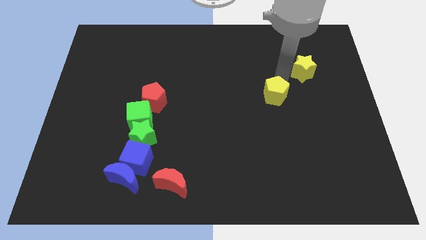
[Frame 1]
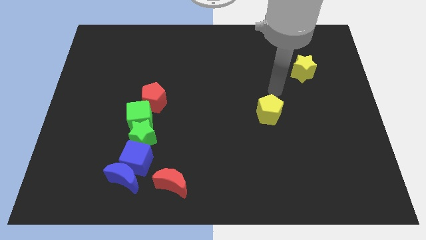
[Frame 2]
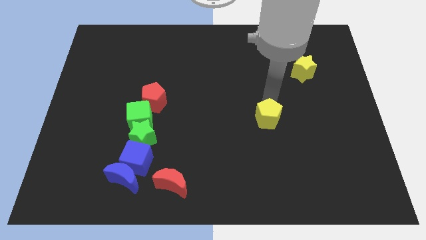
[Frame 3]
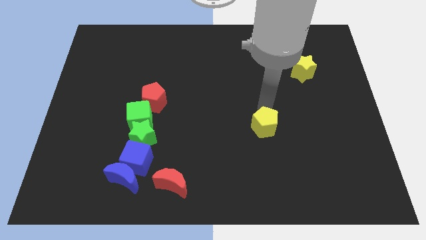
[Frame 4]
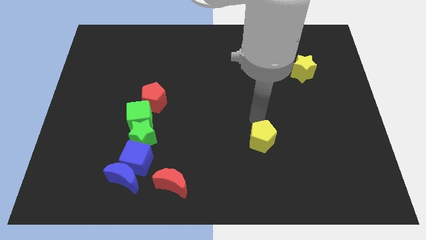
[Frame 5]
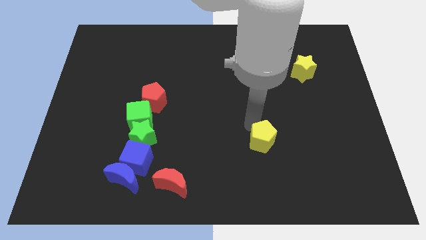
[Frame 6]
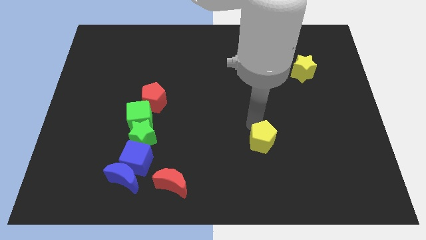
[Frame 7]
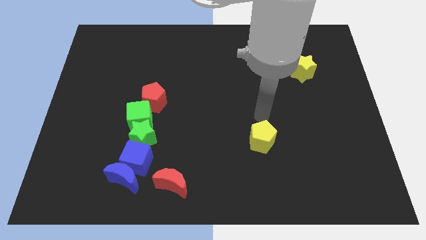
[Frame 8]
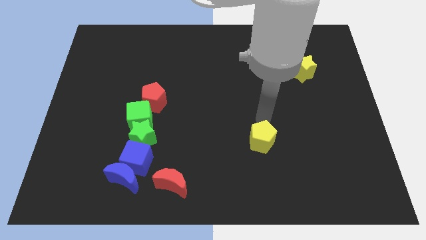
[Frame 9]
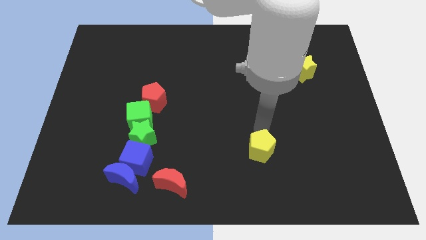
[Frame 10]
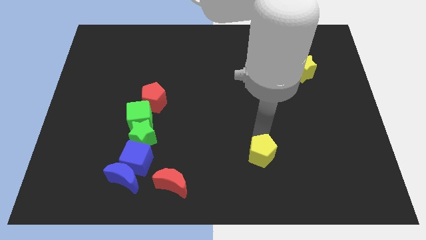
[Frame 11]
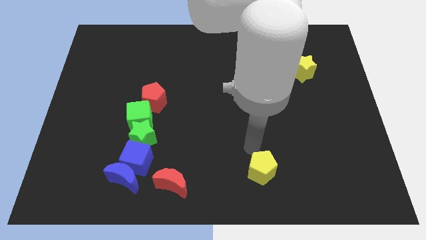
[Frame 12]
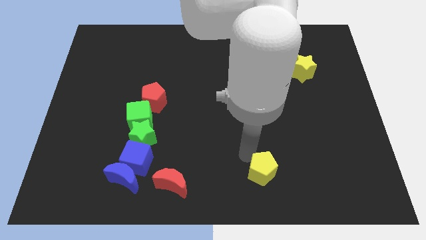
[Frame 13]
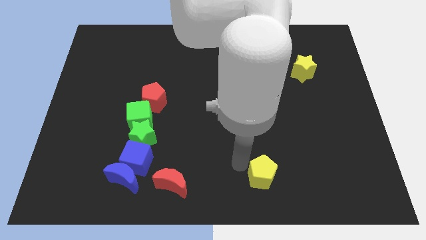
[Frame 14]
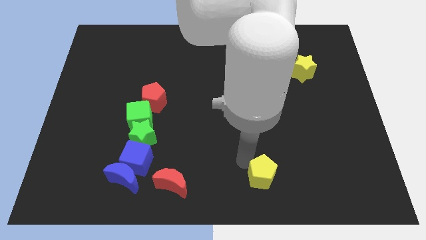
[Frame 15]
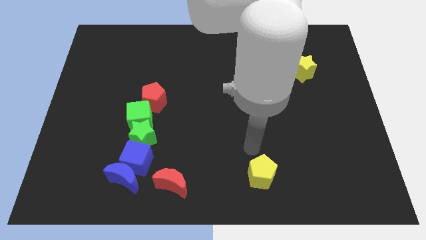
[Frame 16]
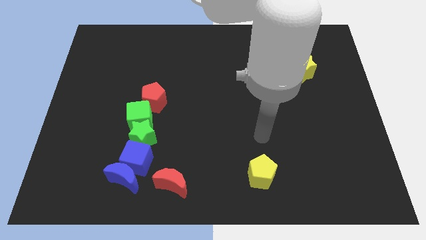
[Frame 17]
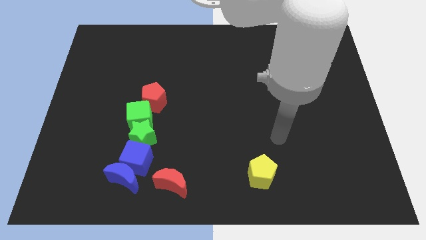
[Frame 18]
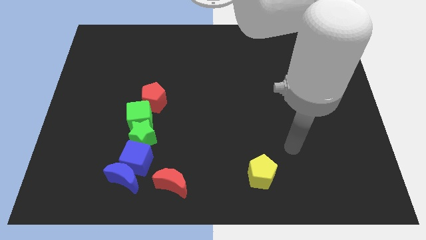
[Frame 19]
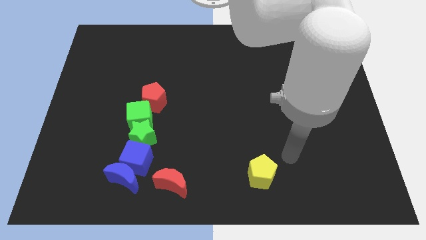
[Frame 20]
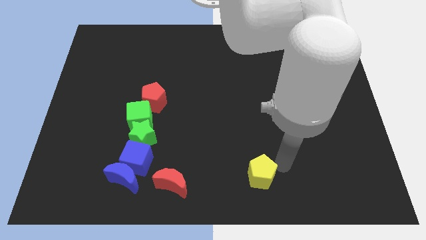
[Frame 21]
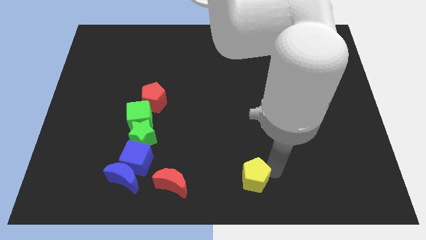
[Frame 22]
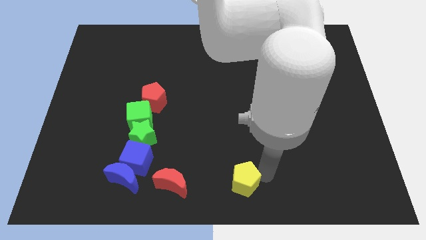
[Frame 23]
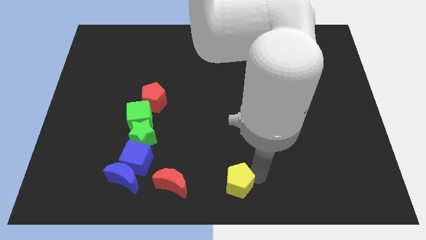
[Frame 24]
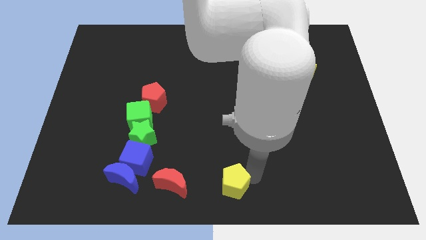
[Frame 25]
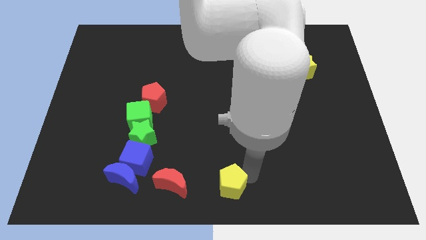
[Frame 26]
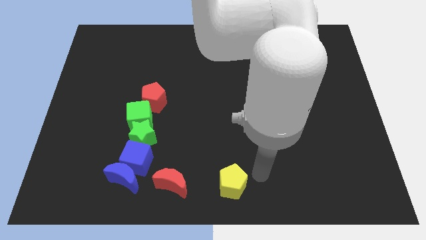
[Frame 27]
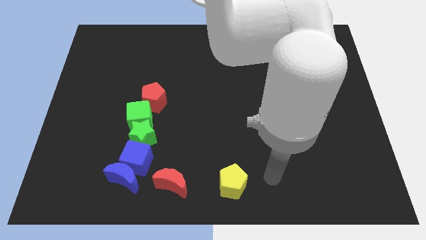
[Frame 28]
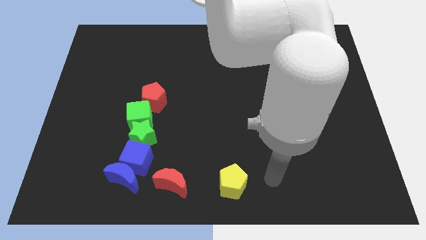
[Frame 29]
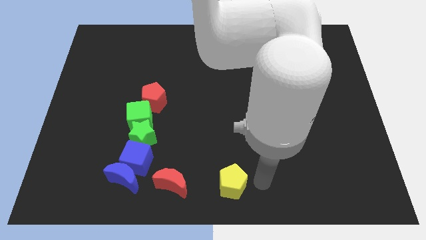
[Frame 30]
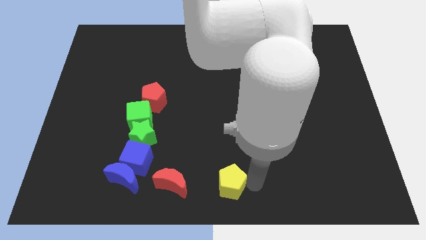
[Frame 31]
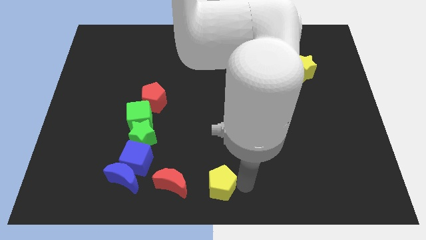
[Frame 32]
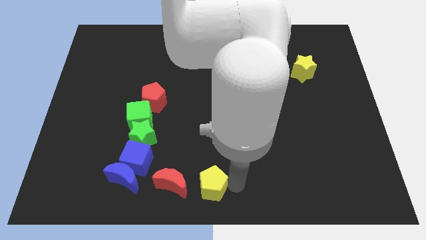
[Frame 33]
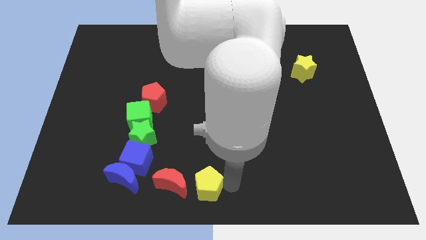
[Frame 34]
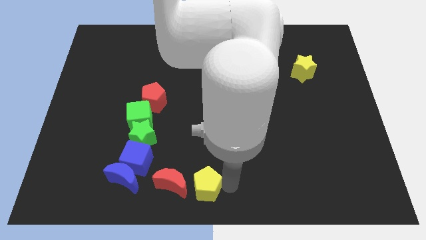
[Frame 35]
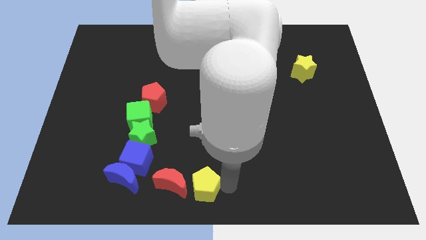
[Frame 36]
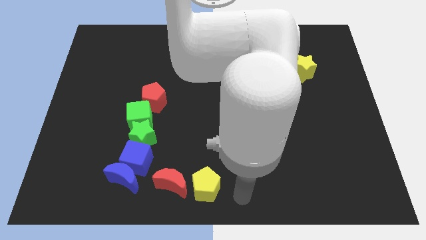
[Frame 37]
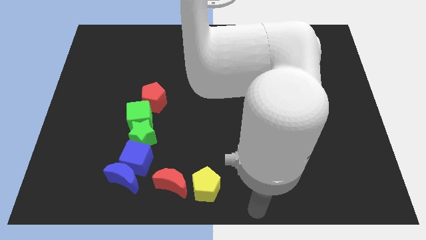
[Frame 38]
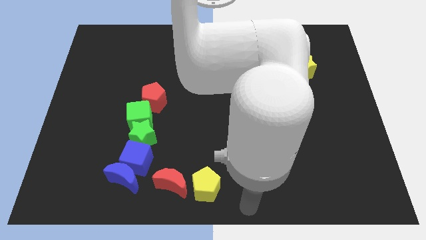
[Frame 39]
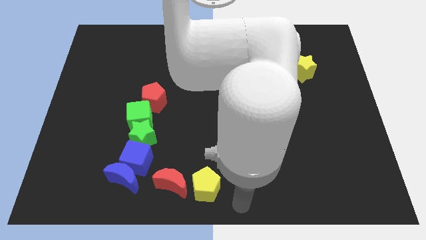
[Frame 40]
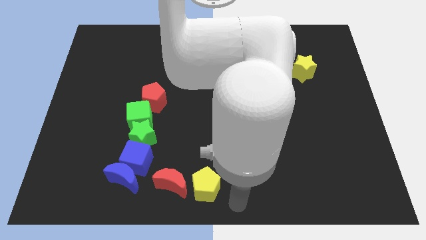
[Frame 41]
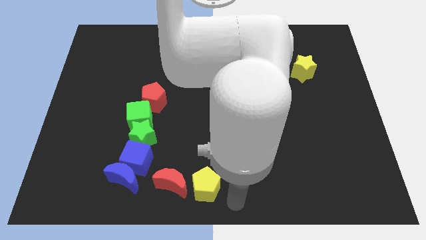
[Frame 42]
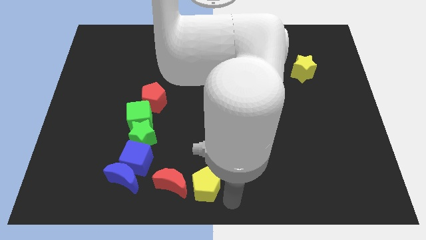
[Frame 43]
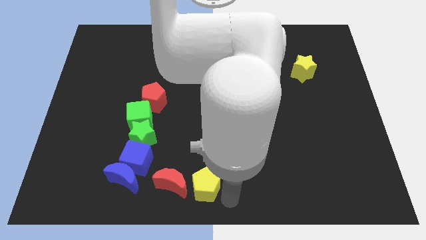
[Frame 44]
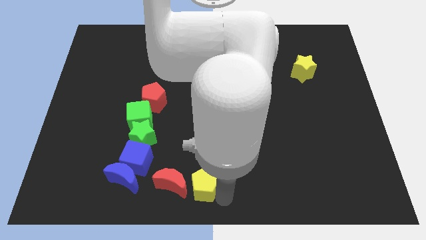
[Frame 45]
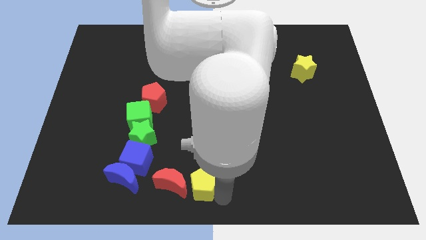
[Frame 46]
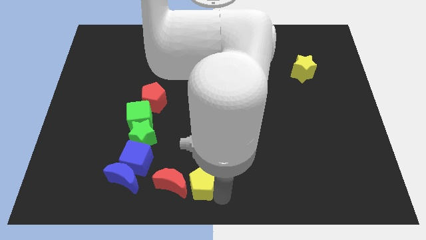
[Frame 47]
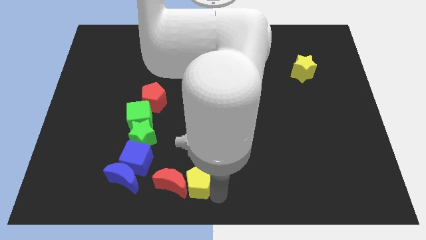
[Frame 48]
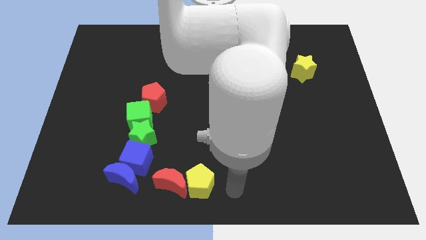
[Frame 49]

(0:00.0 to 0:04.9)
slide the yellow pentagon horizontally on the right side of the red moon

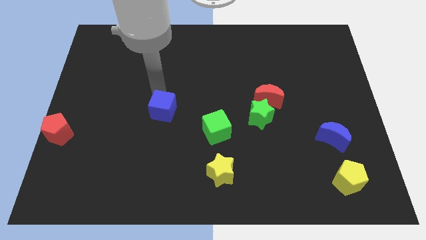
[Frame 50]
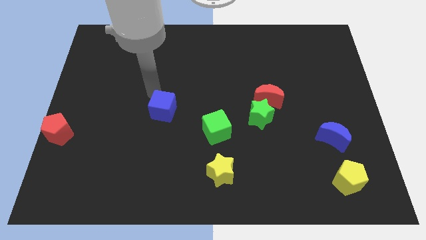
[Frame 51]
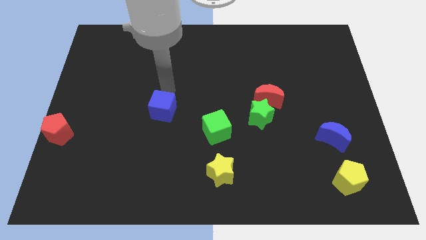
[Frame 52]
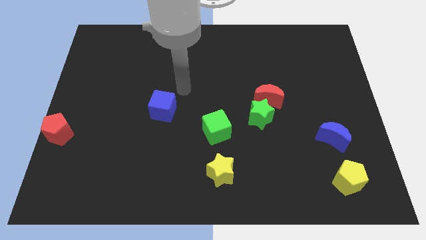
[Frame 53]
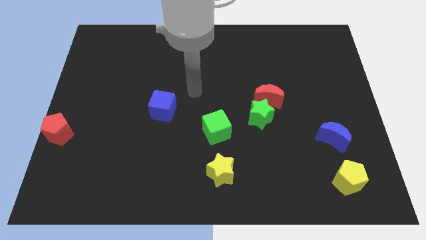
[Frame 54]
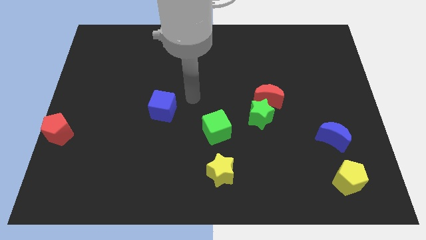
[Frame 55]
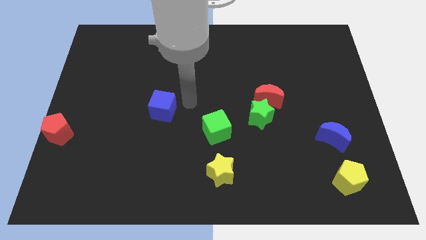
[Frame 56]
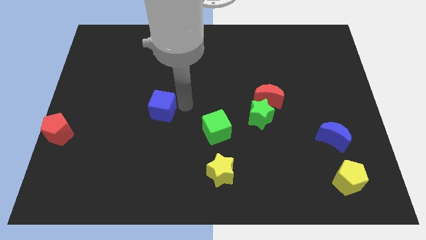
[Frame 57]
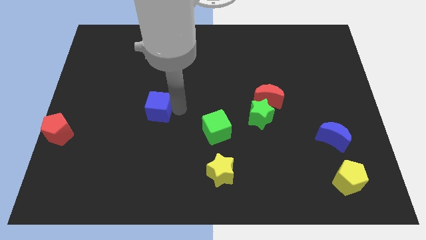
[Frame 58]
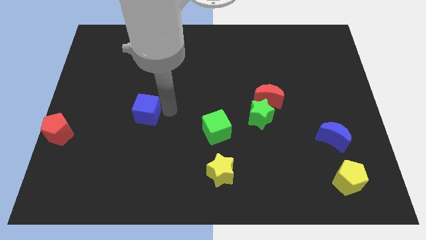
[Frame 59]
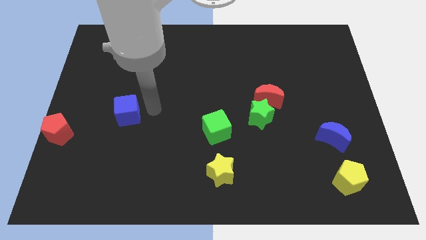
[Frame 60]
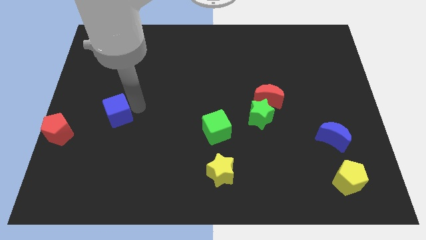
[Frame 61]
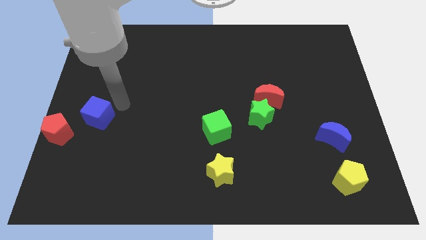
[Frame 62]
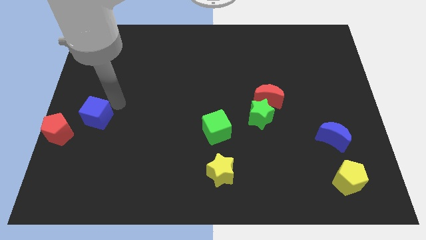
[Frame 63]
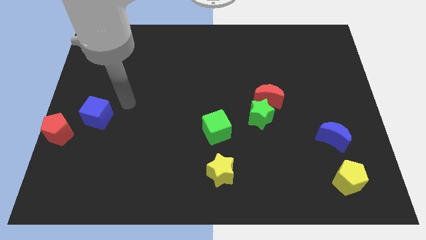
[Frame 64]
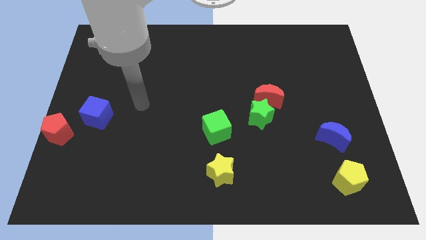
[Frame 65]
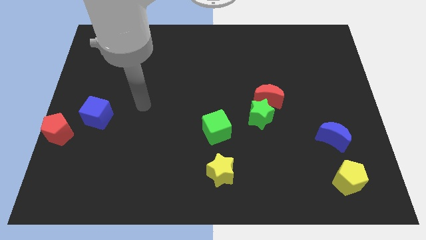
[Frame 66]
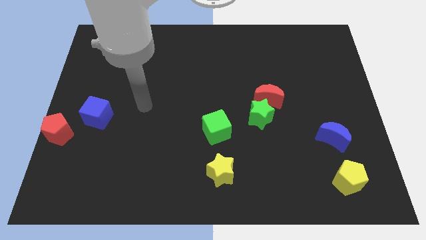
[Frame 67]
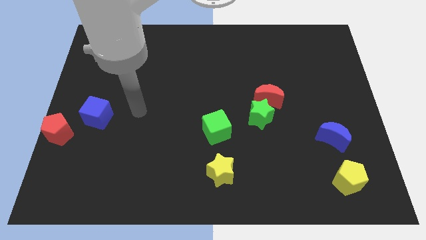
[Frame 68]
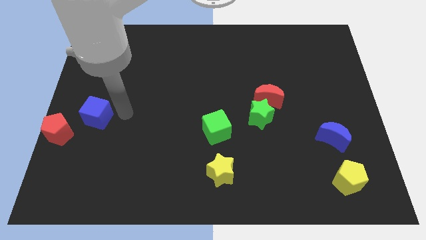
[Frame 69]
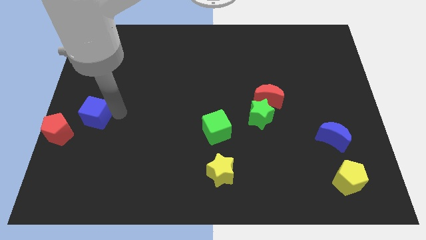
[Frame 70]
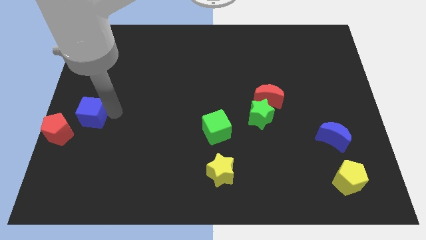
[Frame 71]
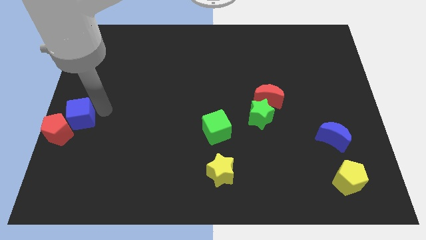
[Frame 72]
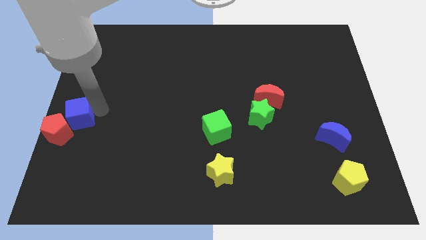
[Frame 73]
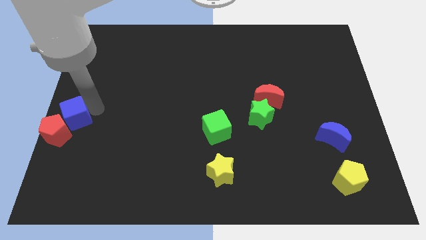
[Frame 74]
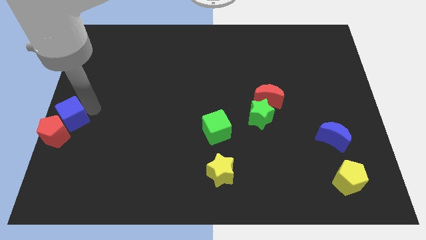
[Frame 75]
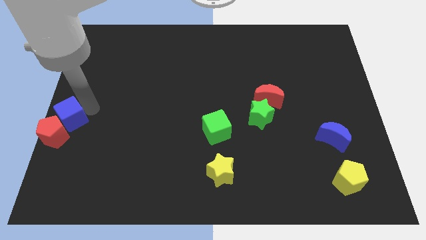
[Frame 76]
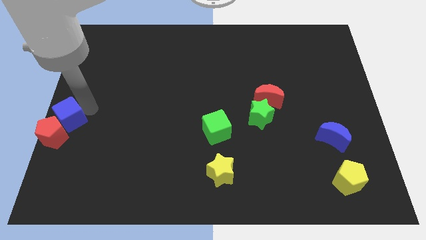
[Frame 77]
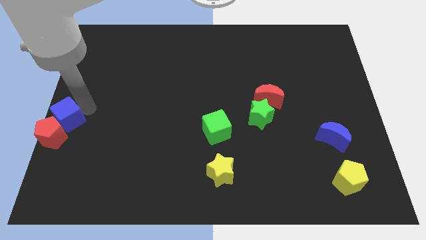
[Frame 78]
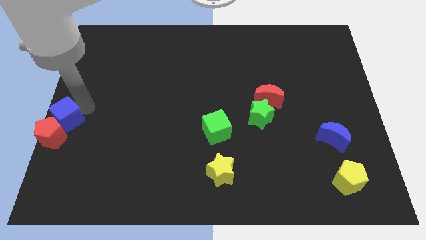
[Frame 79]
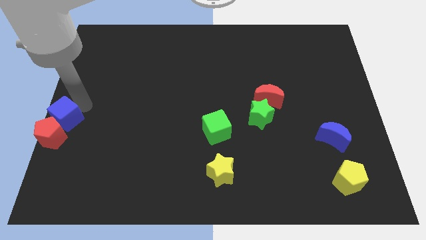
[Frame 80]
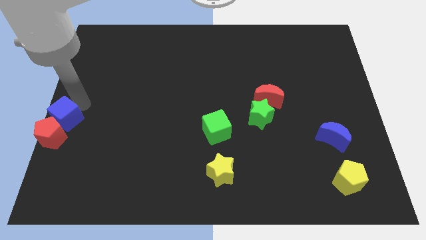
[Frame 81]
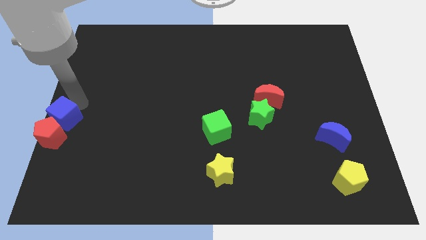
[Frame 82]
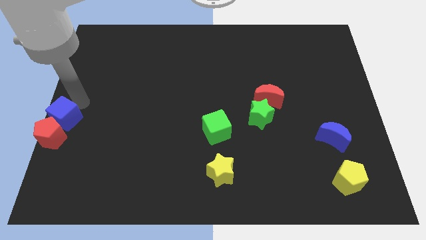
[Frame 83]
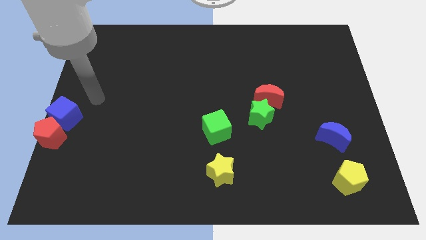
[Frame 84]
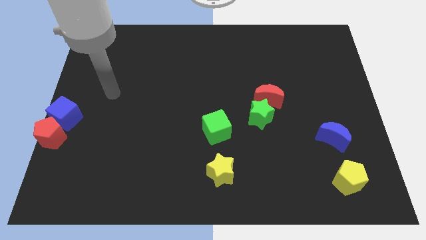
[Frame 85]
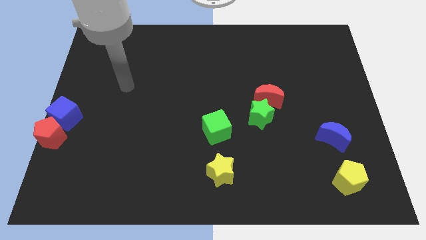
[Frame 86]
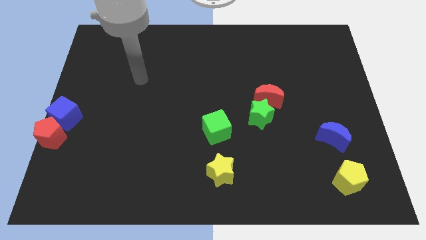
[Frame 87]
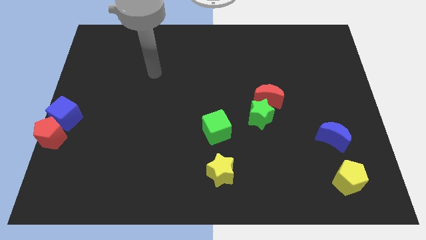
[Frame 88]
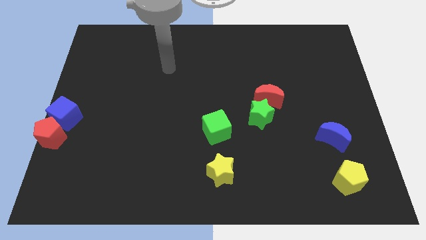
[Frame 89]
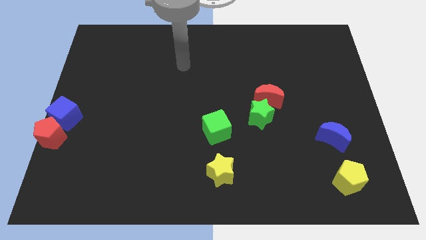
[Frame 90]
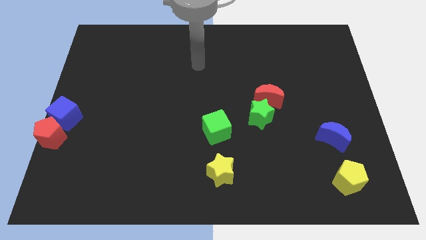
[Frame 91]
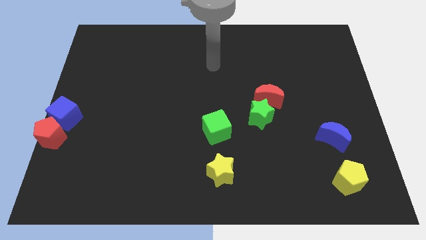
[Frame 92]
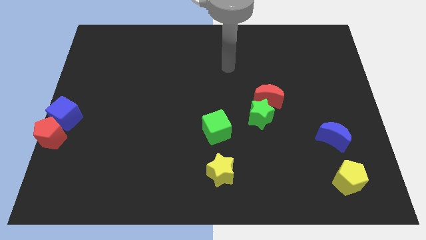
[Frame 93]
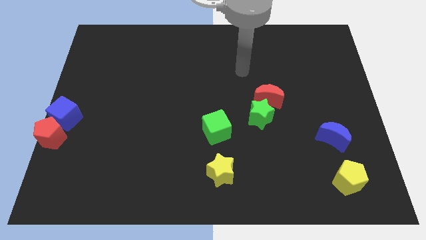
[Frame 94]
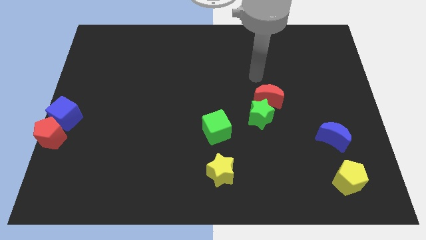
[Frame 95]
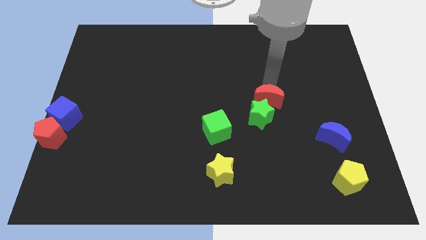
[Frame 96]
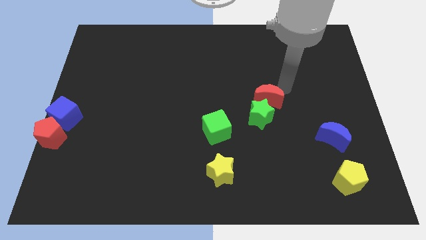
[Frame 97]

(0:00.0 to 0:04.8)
place blue cube to the top of red pentagon
